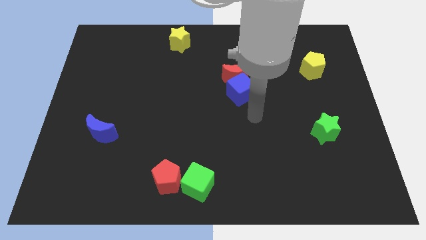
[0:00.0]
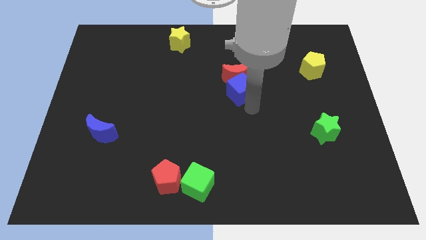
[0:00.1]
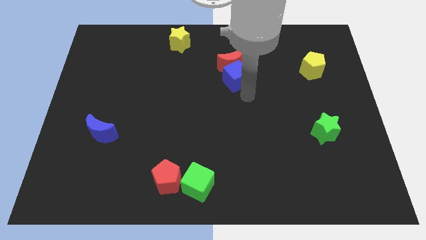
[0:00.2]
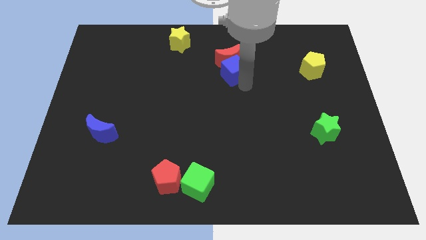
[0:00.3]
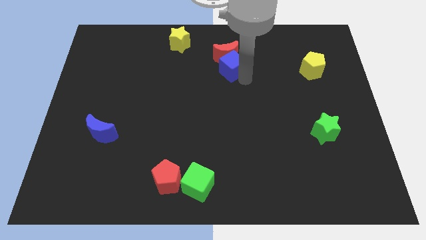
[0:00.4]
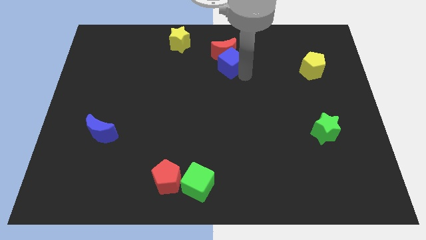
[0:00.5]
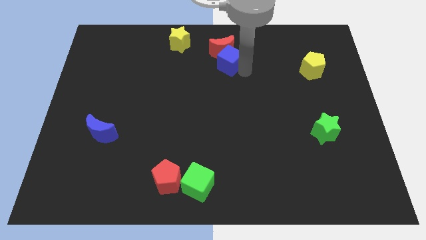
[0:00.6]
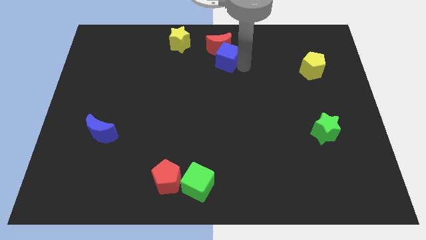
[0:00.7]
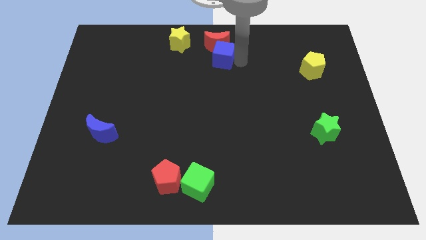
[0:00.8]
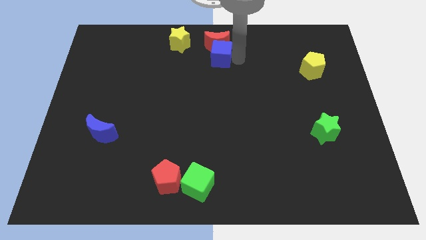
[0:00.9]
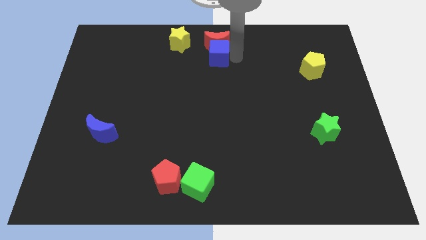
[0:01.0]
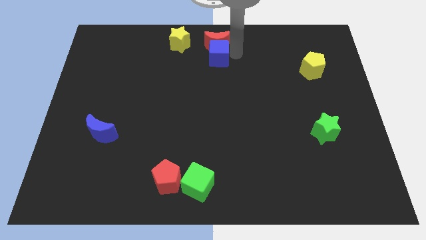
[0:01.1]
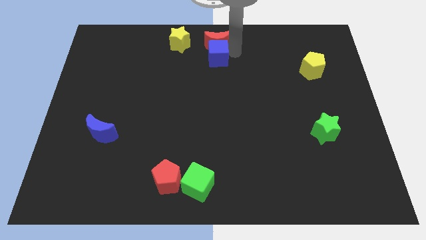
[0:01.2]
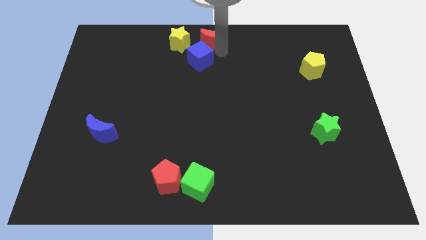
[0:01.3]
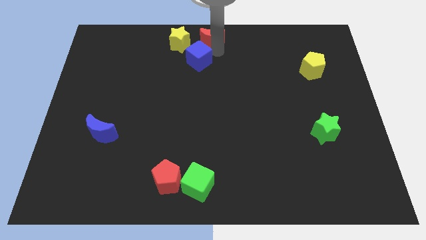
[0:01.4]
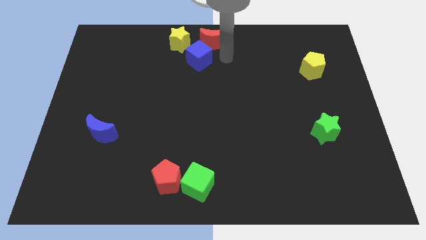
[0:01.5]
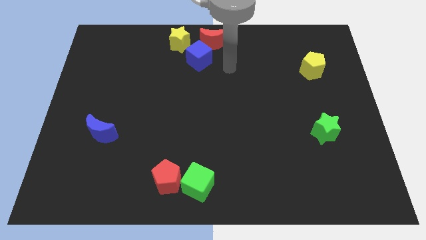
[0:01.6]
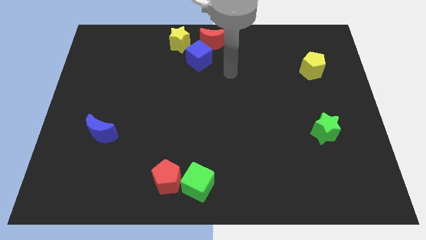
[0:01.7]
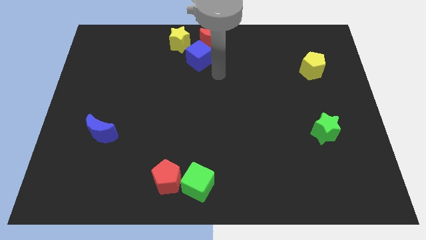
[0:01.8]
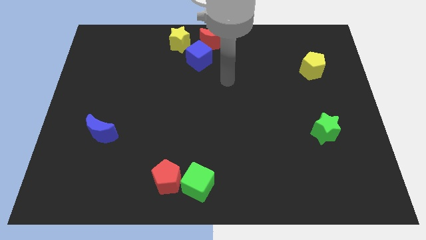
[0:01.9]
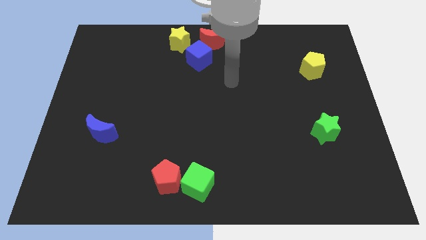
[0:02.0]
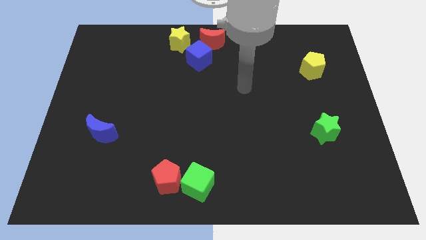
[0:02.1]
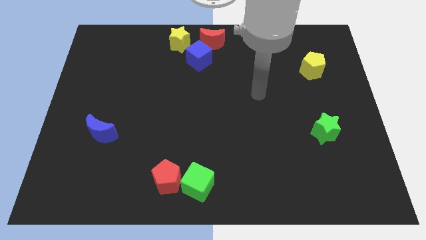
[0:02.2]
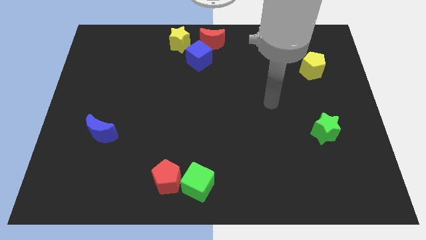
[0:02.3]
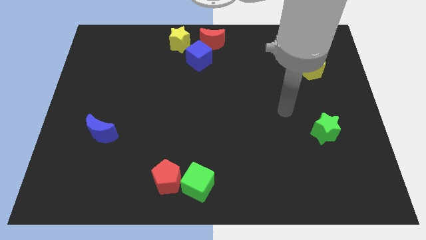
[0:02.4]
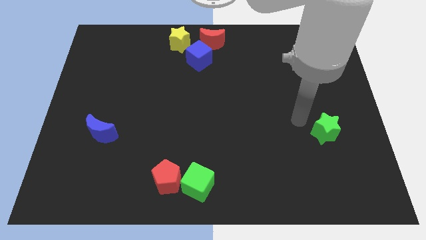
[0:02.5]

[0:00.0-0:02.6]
move red moon and blue cube towards yellow star

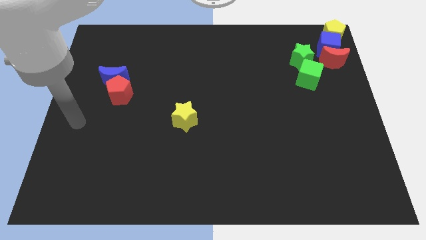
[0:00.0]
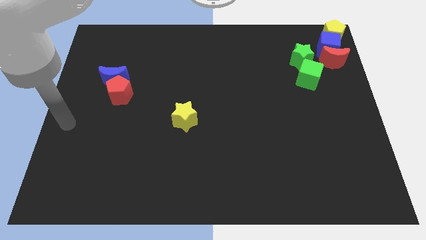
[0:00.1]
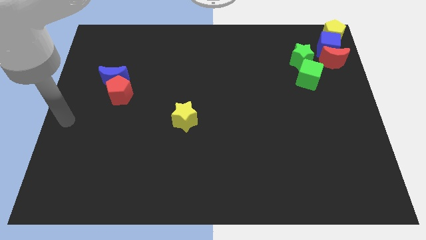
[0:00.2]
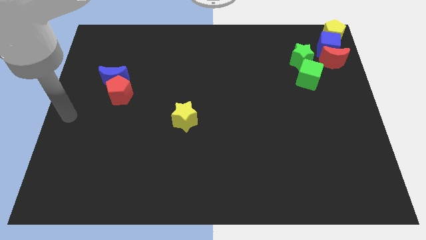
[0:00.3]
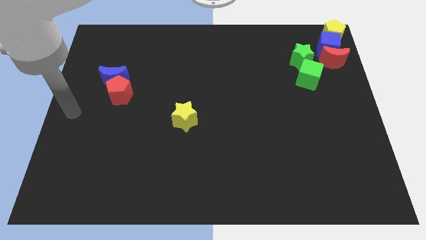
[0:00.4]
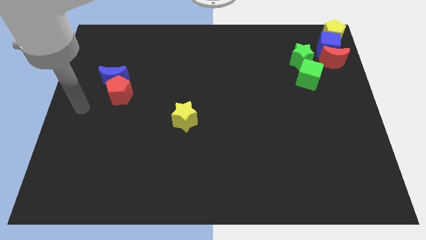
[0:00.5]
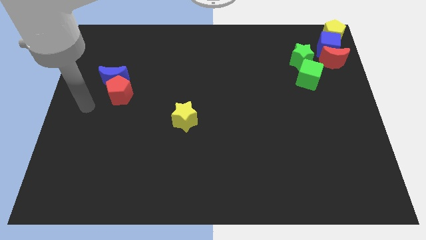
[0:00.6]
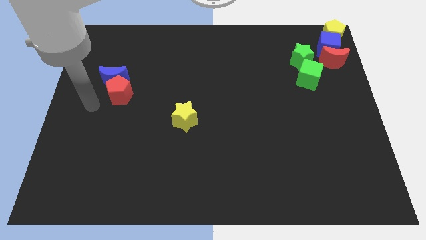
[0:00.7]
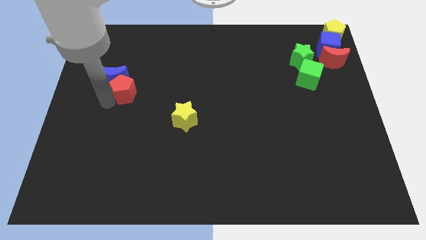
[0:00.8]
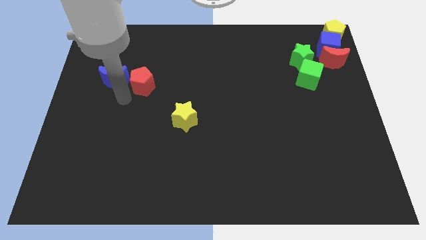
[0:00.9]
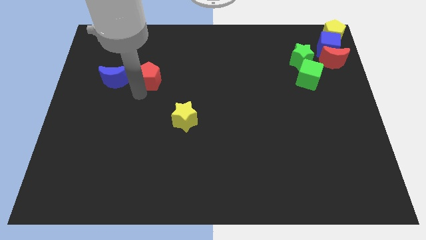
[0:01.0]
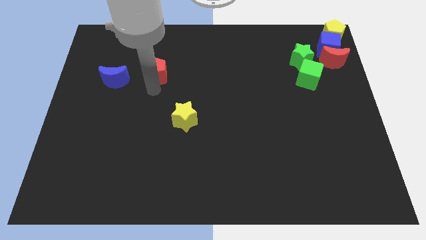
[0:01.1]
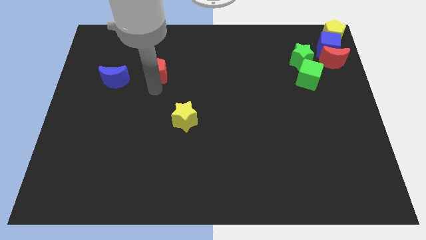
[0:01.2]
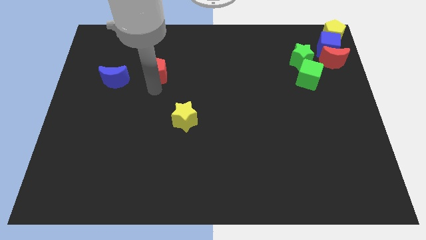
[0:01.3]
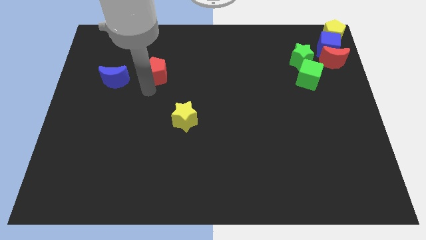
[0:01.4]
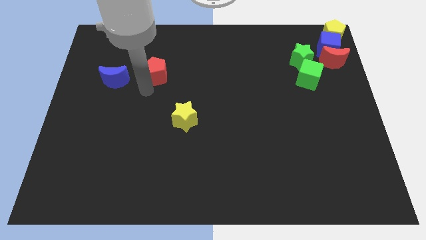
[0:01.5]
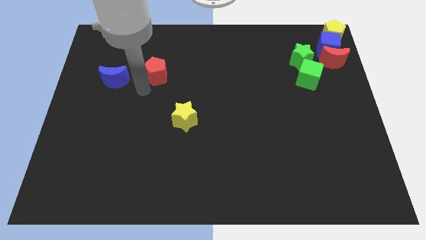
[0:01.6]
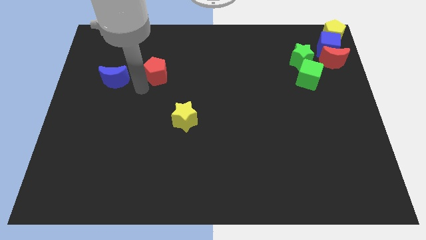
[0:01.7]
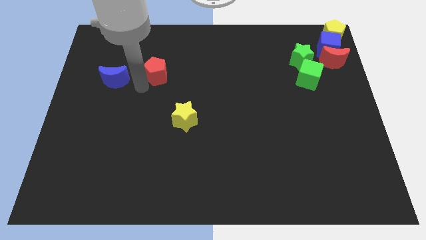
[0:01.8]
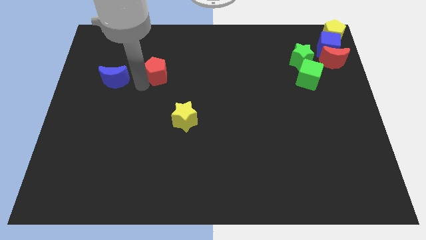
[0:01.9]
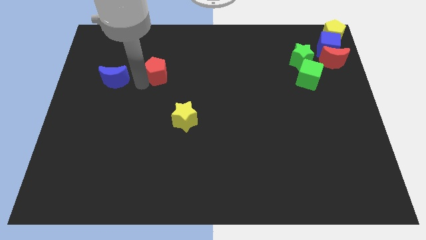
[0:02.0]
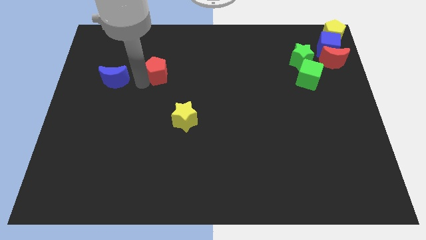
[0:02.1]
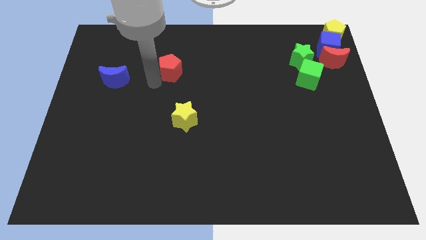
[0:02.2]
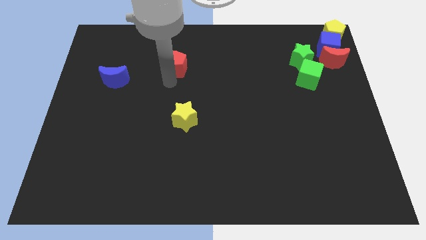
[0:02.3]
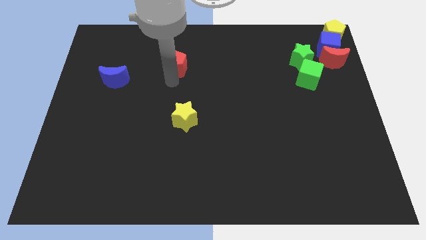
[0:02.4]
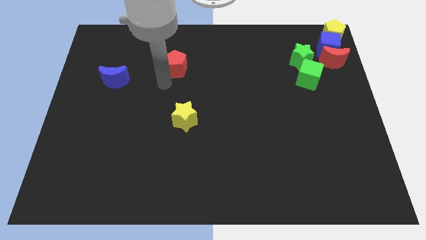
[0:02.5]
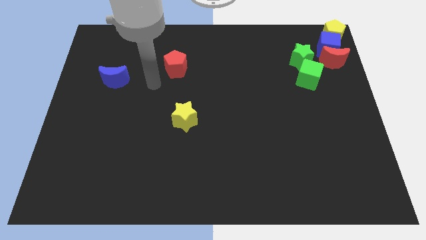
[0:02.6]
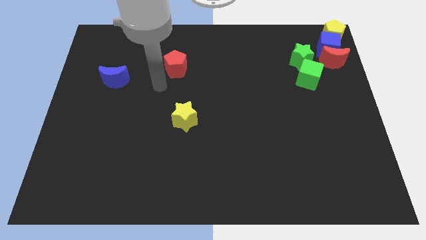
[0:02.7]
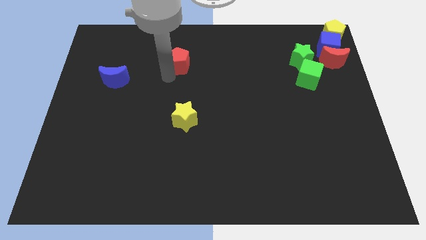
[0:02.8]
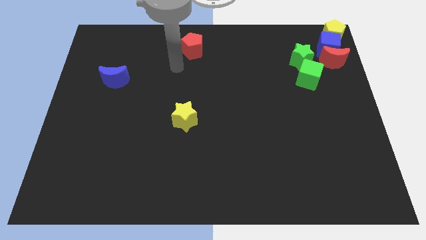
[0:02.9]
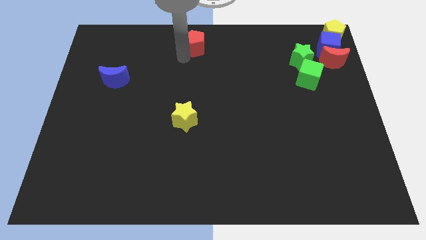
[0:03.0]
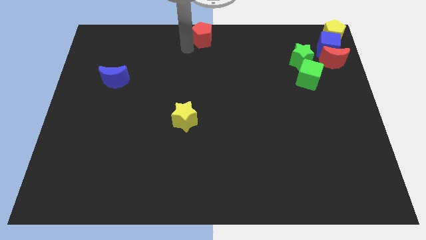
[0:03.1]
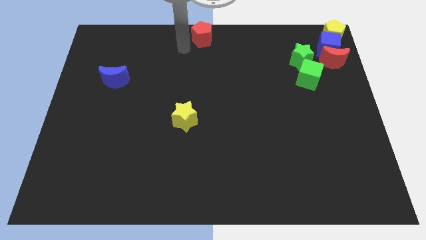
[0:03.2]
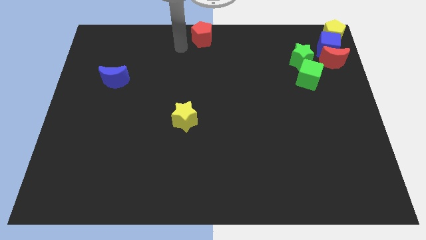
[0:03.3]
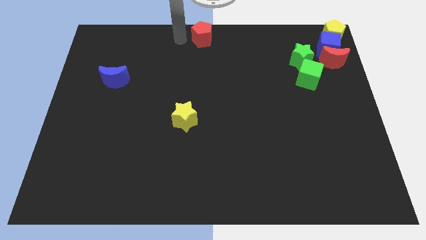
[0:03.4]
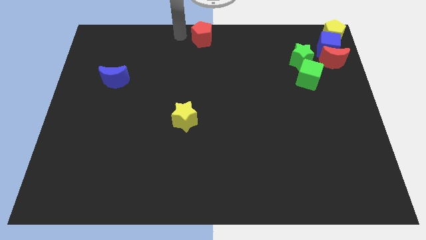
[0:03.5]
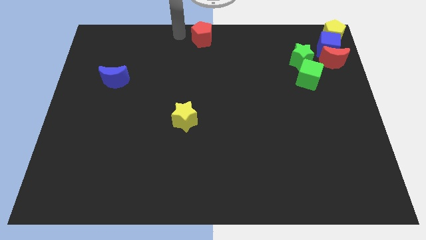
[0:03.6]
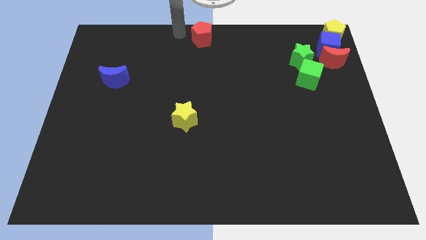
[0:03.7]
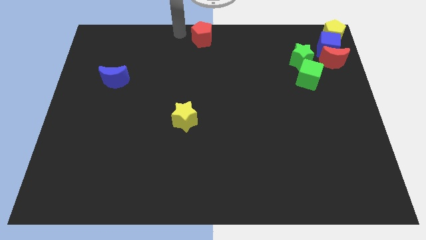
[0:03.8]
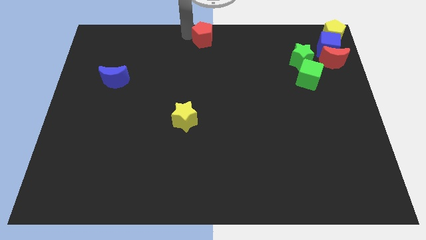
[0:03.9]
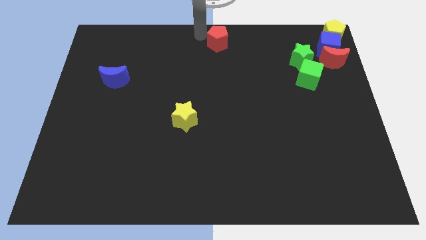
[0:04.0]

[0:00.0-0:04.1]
place the red pentagon at the top center of the board

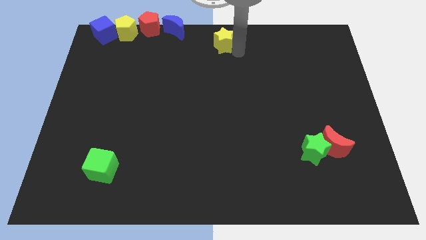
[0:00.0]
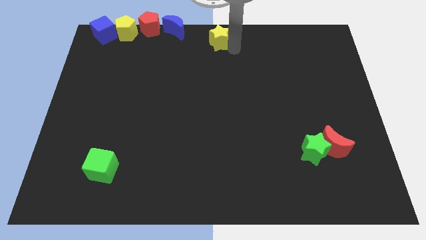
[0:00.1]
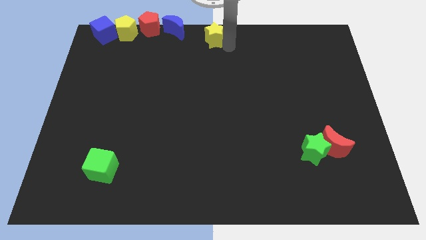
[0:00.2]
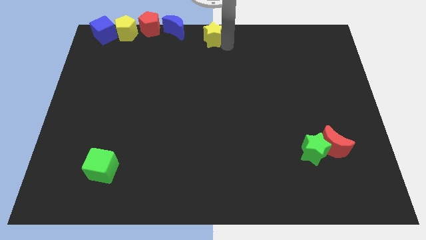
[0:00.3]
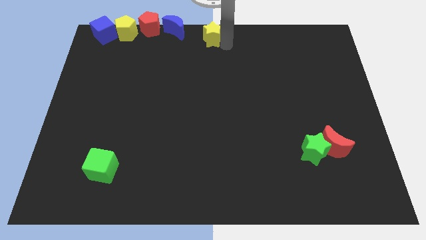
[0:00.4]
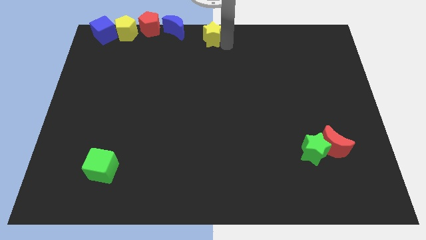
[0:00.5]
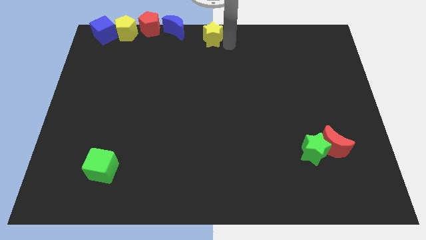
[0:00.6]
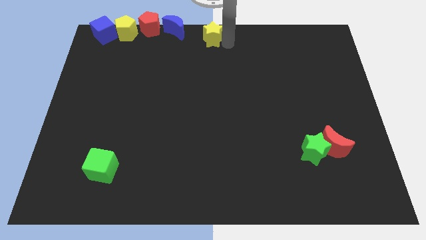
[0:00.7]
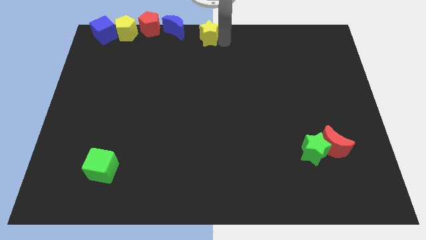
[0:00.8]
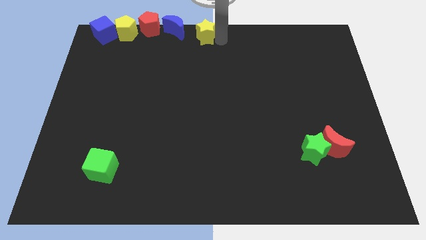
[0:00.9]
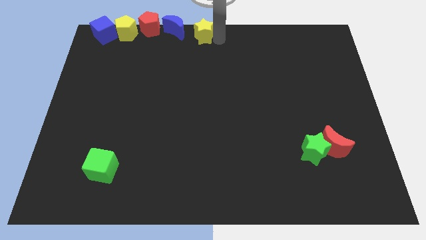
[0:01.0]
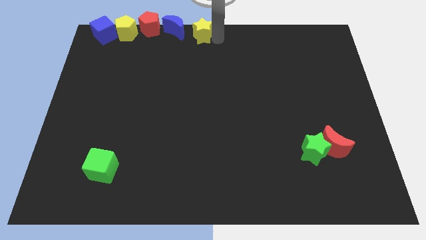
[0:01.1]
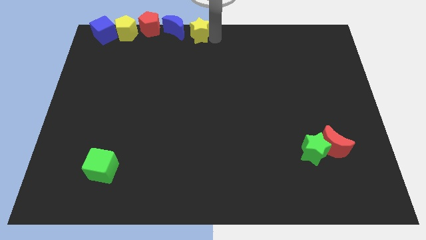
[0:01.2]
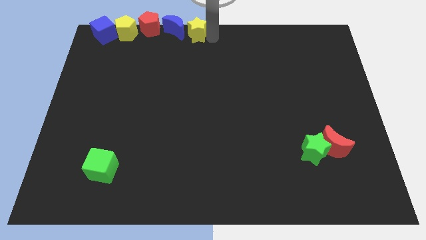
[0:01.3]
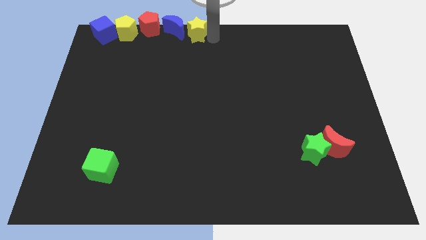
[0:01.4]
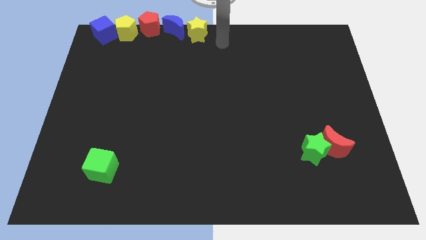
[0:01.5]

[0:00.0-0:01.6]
place the yellow star to the right side of the blue crescent

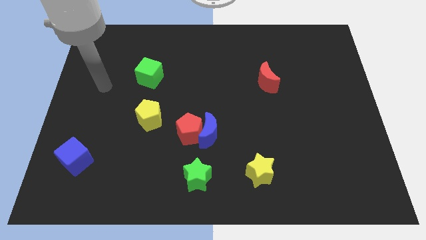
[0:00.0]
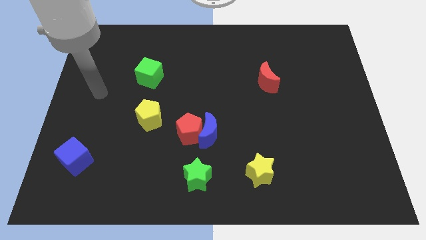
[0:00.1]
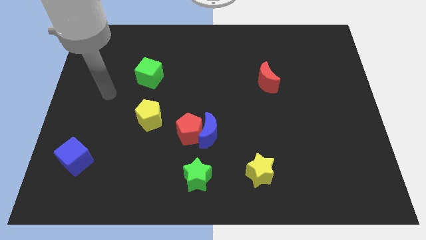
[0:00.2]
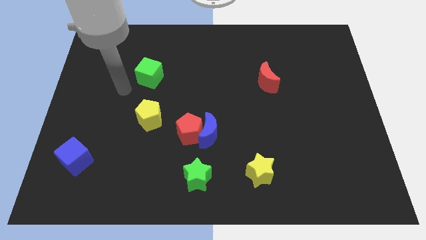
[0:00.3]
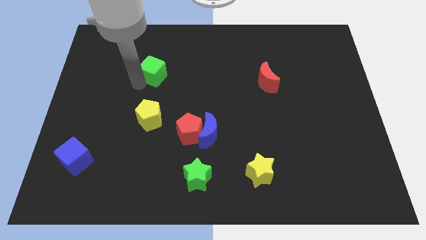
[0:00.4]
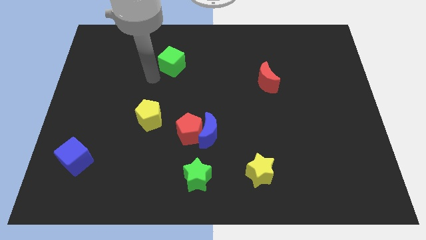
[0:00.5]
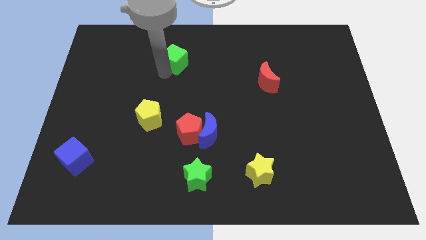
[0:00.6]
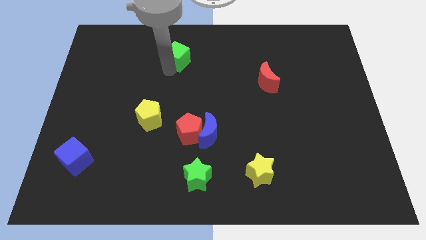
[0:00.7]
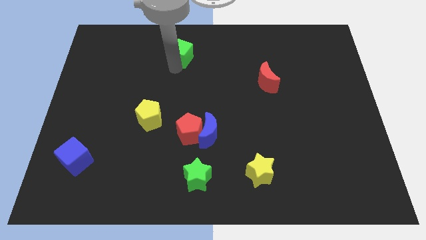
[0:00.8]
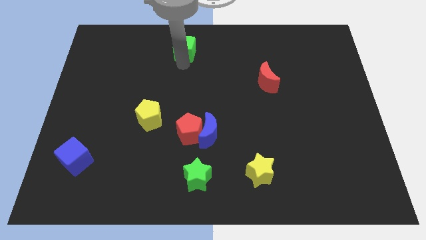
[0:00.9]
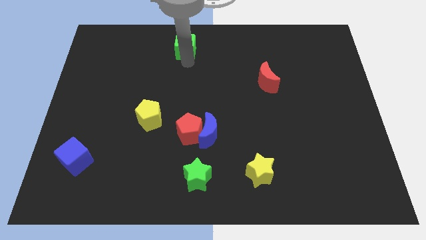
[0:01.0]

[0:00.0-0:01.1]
slide the green cube towards the top side of the board
